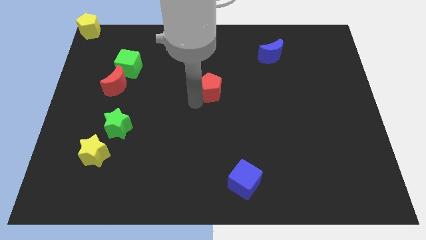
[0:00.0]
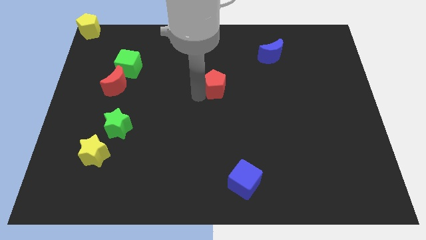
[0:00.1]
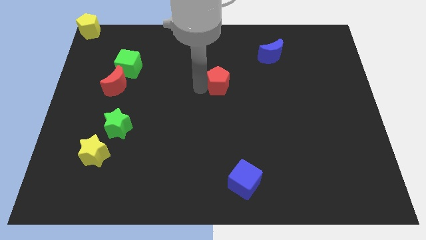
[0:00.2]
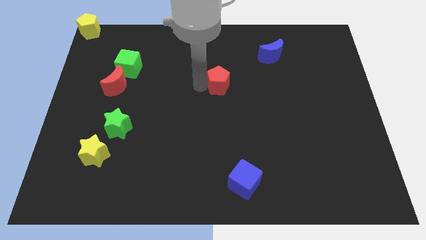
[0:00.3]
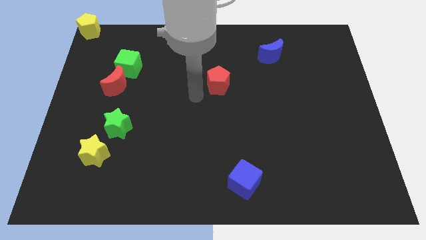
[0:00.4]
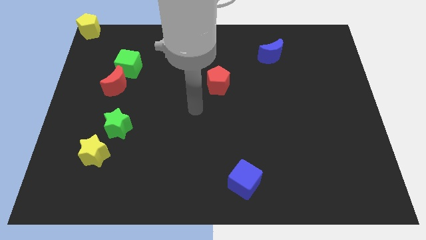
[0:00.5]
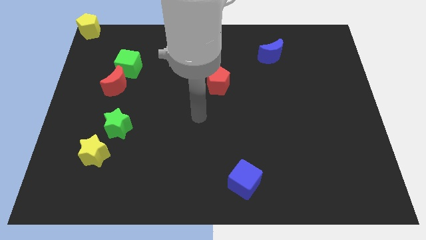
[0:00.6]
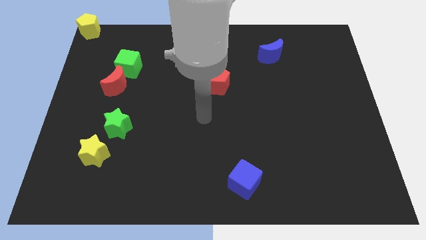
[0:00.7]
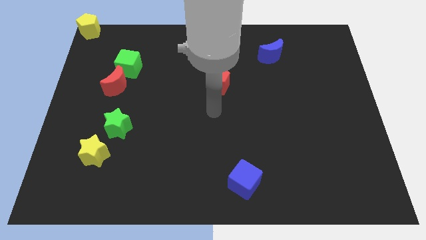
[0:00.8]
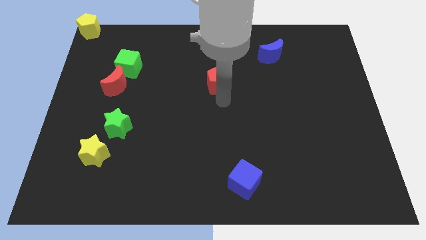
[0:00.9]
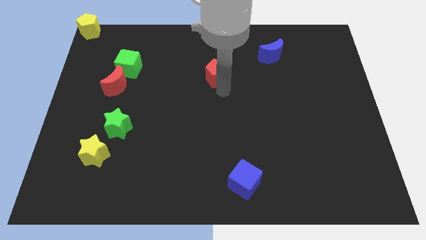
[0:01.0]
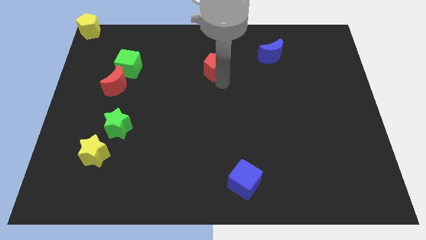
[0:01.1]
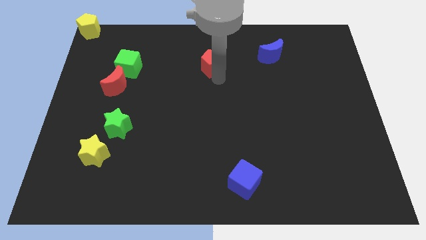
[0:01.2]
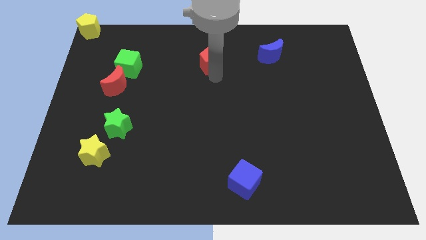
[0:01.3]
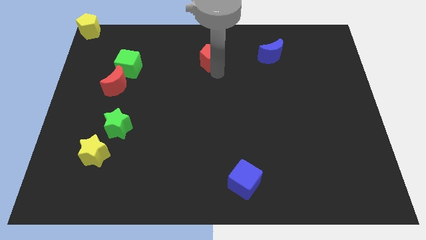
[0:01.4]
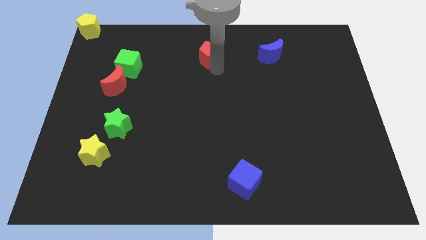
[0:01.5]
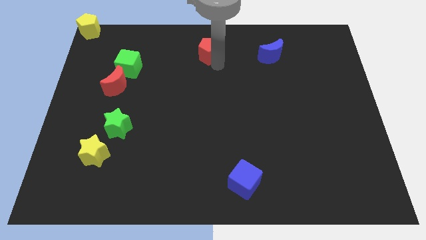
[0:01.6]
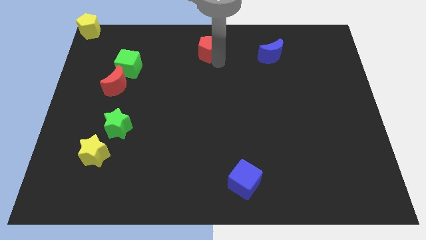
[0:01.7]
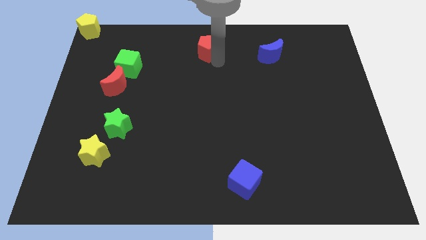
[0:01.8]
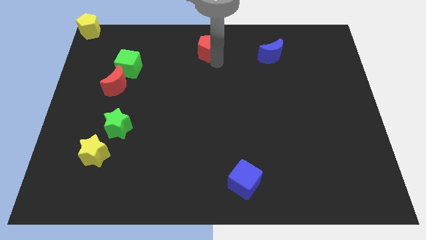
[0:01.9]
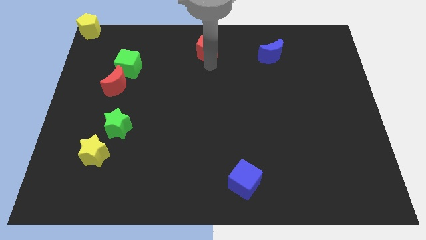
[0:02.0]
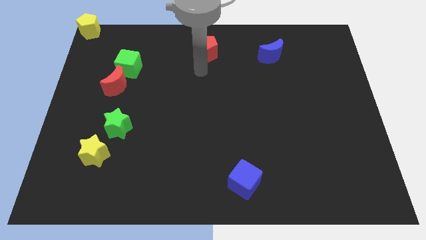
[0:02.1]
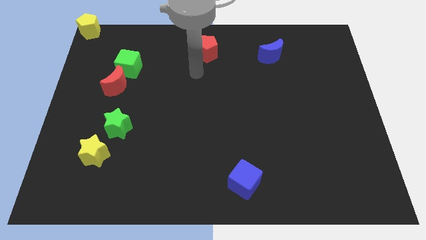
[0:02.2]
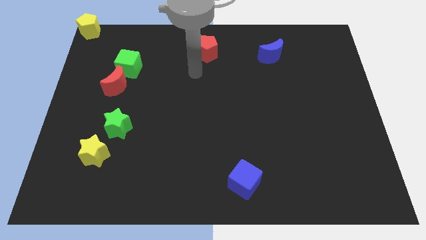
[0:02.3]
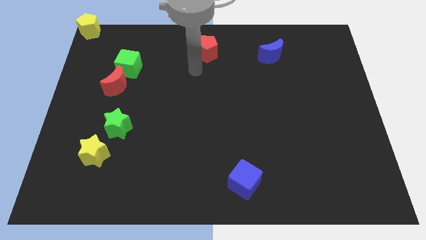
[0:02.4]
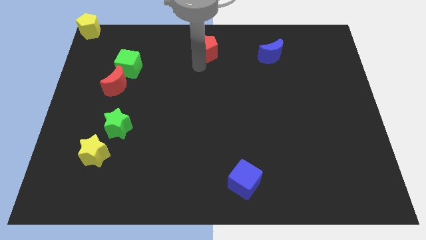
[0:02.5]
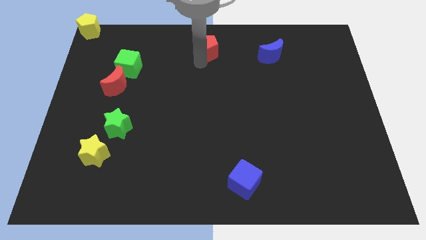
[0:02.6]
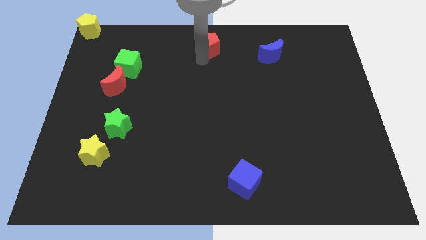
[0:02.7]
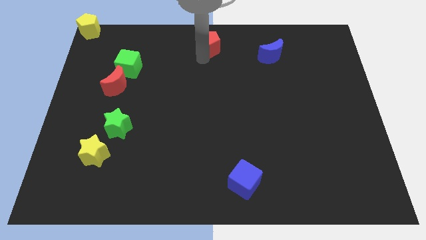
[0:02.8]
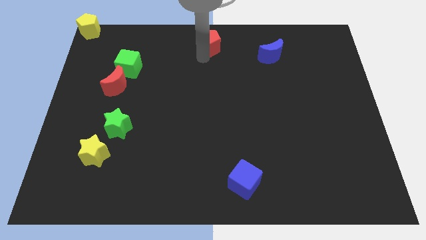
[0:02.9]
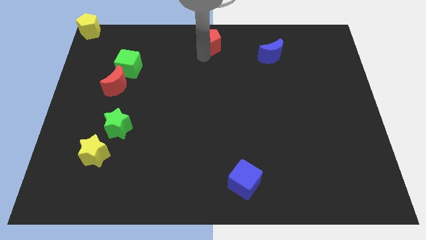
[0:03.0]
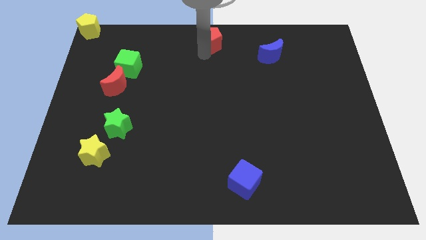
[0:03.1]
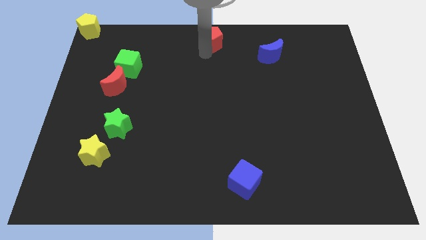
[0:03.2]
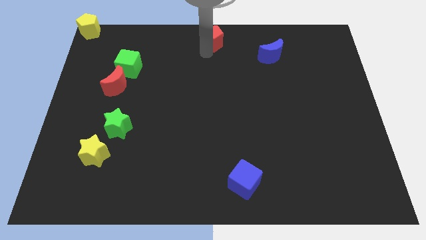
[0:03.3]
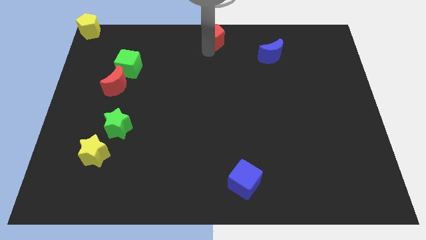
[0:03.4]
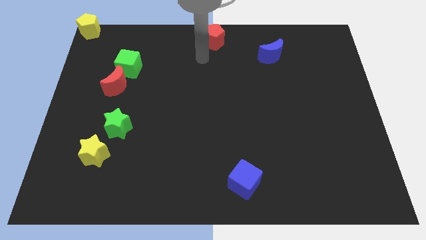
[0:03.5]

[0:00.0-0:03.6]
move the red pentagon to the top center

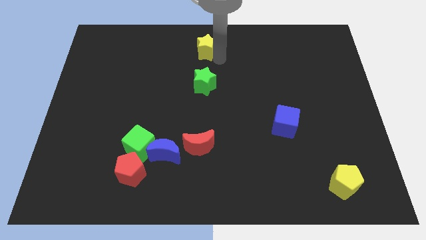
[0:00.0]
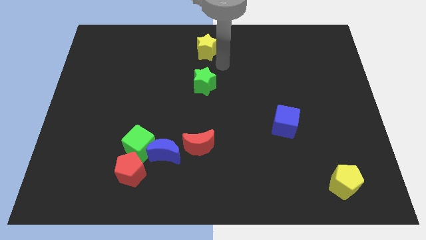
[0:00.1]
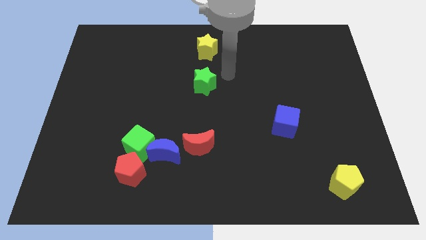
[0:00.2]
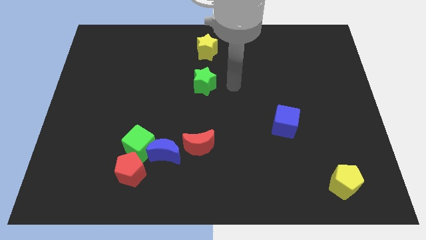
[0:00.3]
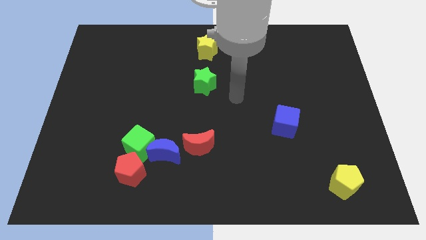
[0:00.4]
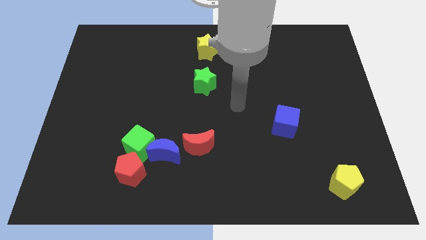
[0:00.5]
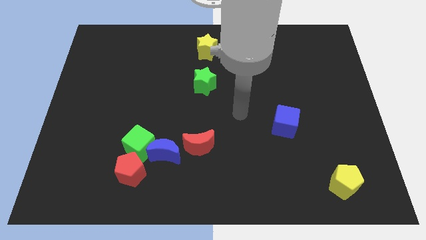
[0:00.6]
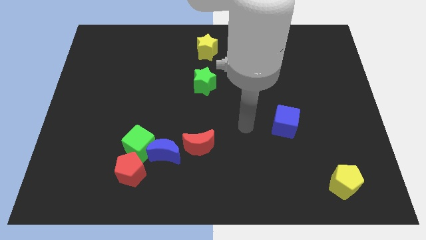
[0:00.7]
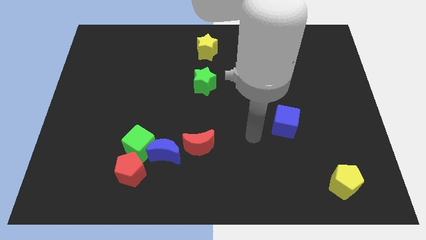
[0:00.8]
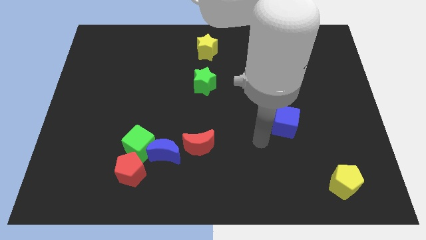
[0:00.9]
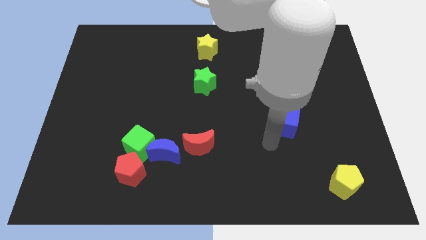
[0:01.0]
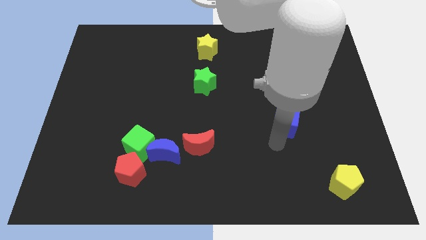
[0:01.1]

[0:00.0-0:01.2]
move your arm towards the blue cube

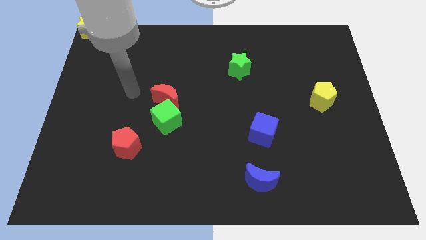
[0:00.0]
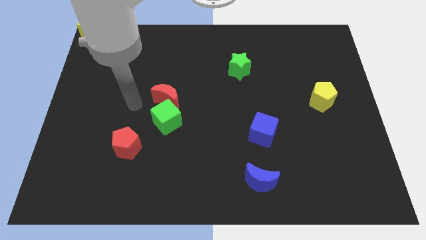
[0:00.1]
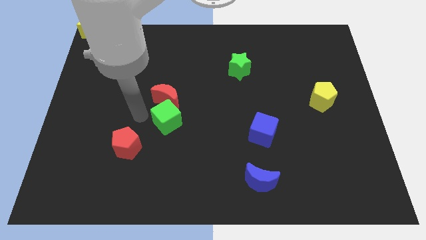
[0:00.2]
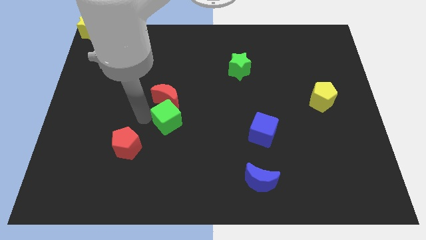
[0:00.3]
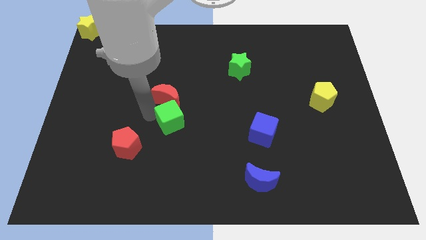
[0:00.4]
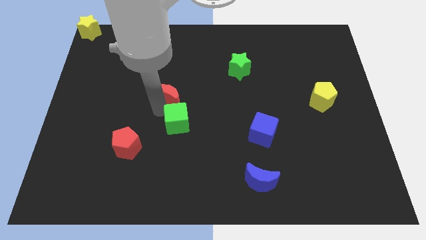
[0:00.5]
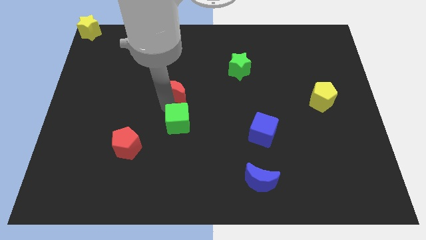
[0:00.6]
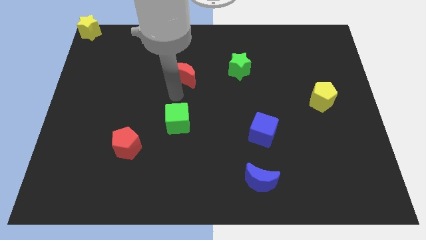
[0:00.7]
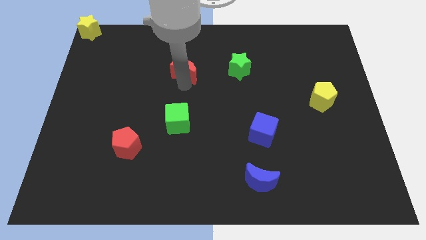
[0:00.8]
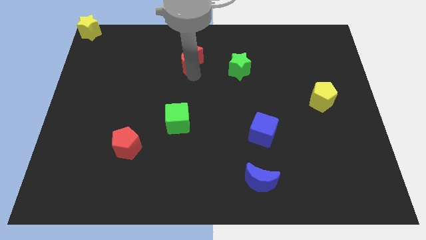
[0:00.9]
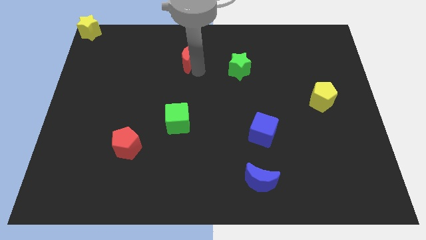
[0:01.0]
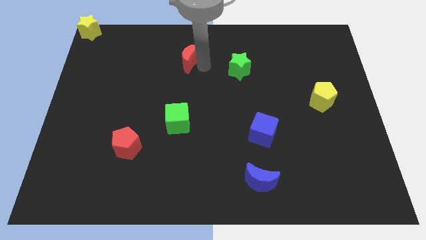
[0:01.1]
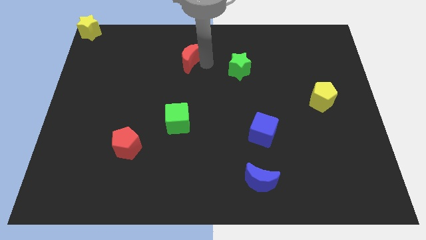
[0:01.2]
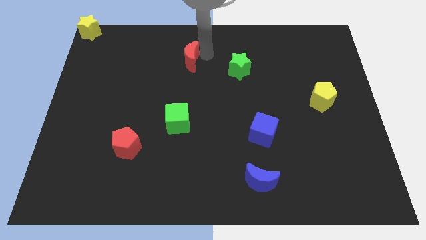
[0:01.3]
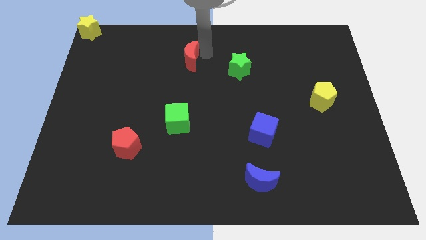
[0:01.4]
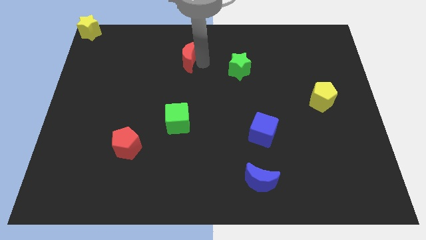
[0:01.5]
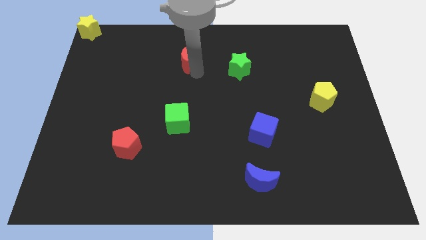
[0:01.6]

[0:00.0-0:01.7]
while touch the green cube move the red moon to the top center side

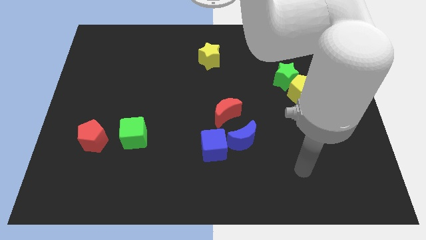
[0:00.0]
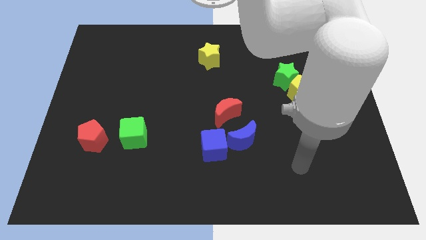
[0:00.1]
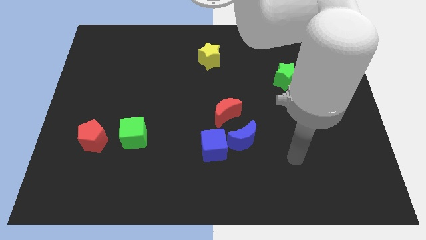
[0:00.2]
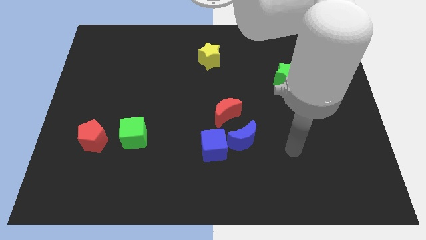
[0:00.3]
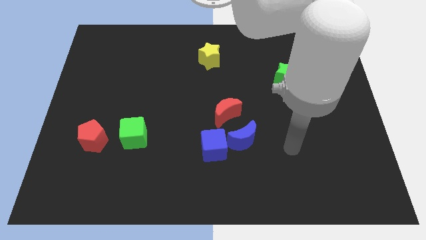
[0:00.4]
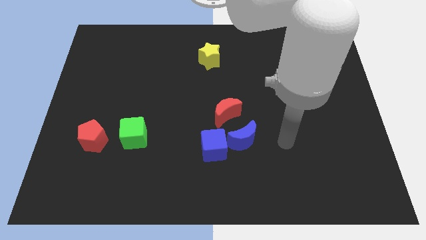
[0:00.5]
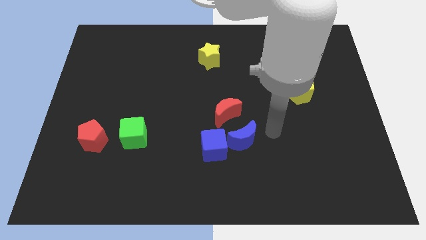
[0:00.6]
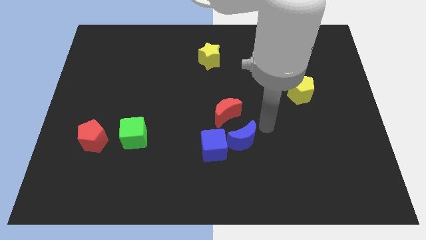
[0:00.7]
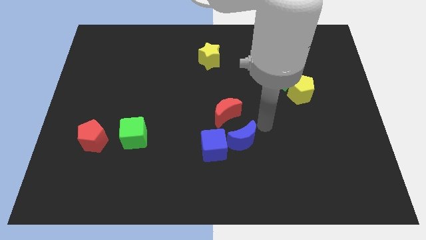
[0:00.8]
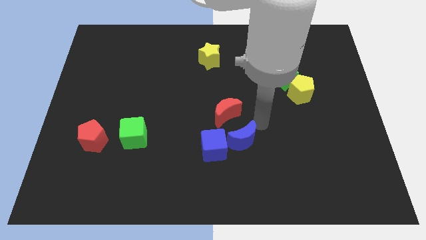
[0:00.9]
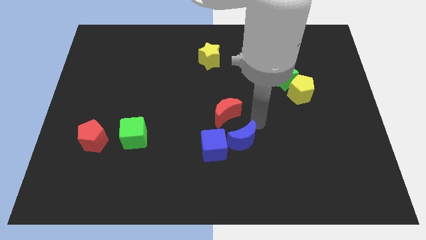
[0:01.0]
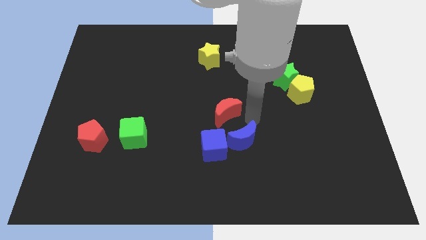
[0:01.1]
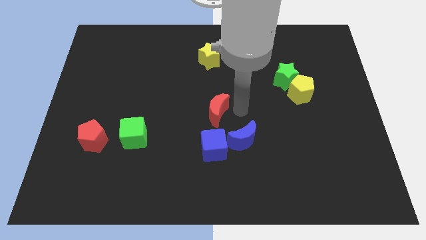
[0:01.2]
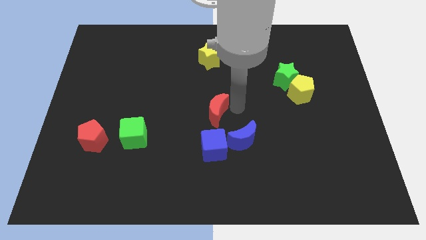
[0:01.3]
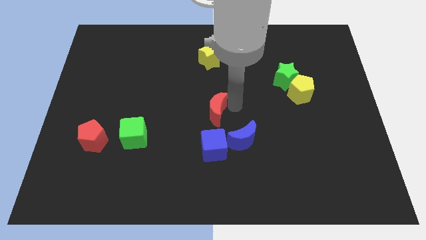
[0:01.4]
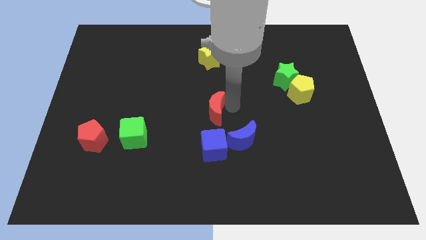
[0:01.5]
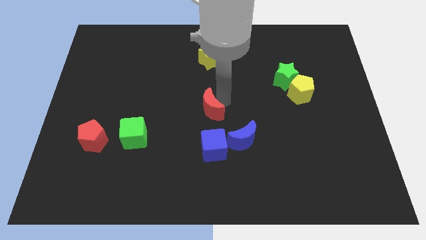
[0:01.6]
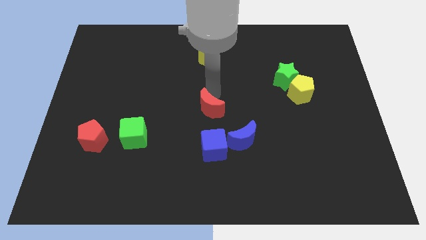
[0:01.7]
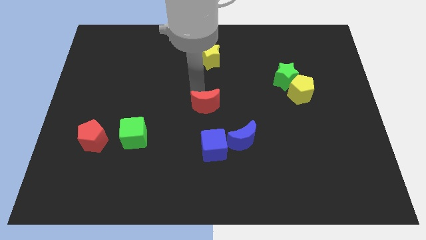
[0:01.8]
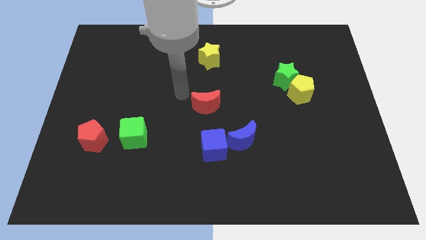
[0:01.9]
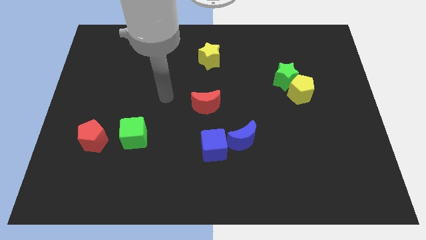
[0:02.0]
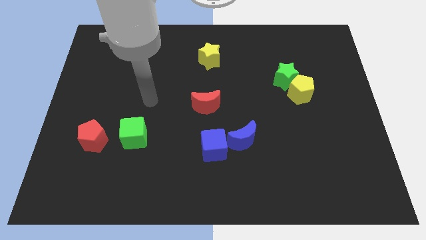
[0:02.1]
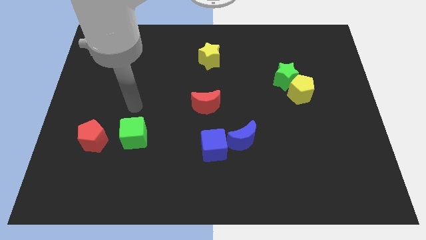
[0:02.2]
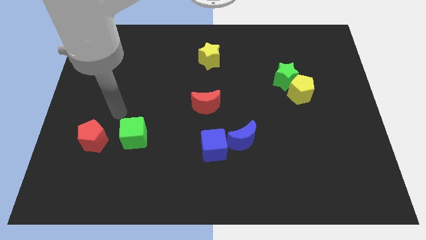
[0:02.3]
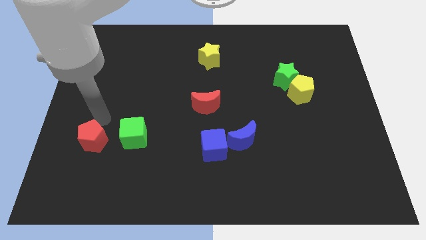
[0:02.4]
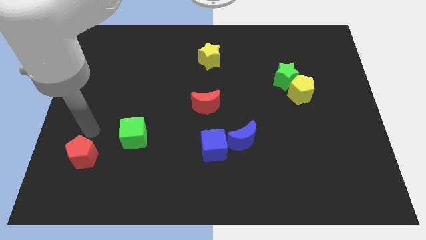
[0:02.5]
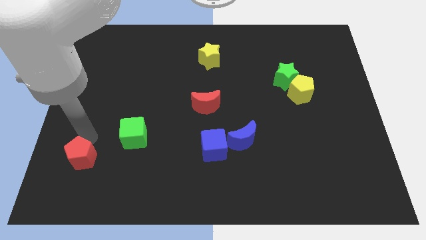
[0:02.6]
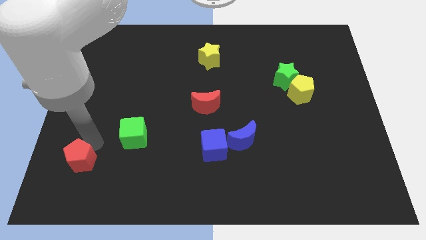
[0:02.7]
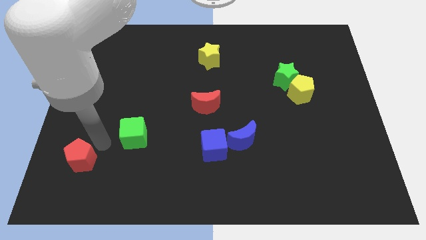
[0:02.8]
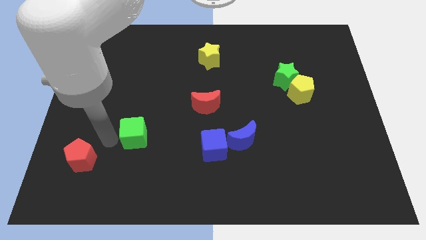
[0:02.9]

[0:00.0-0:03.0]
turn the red moon and push the red pentagon downwards
